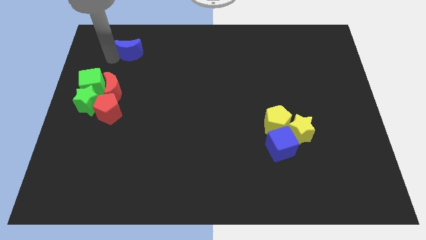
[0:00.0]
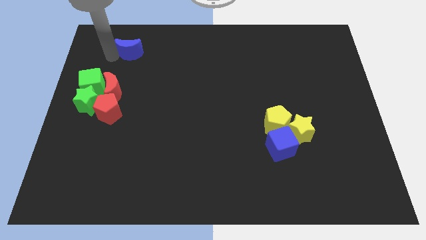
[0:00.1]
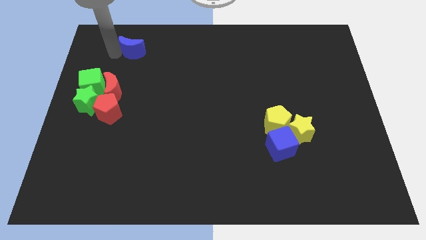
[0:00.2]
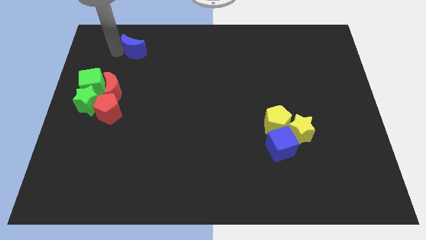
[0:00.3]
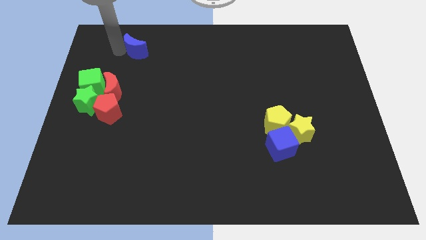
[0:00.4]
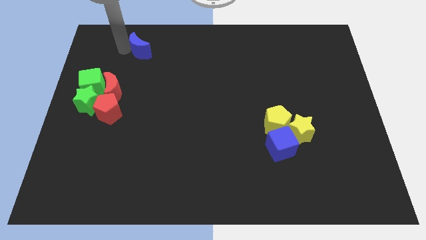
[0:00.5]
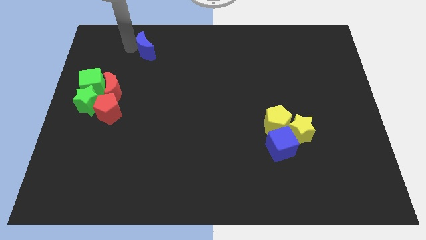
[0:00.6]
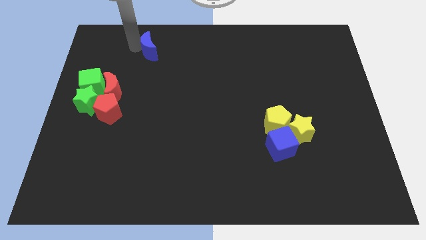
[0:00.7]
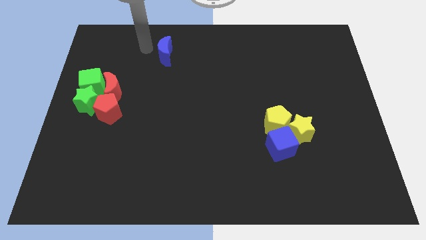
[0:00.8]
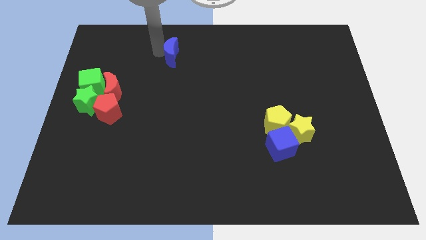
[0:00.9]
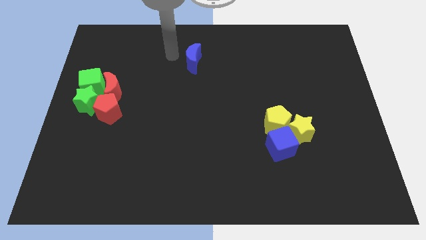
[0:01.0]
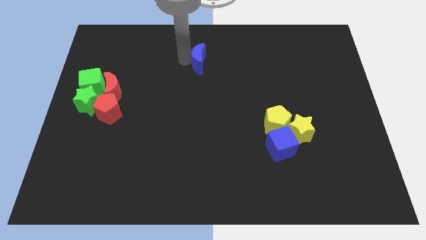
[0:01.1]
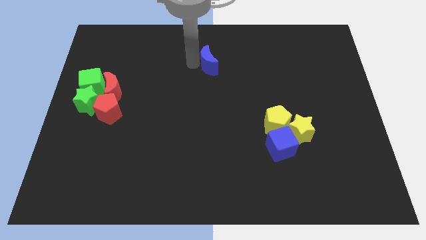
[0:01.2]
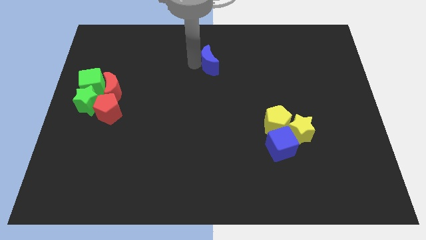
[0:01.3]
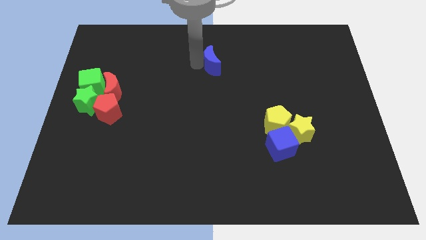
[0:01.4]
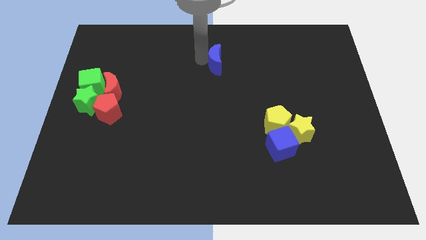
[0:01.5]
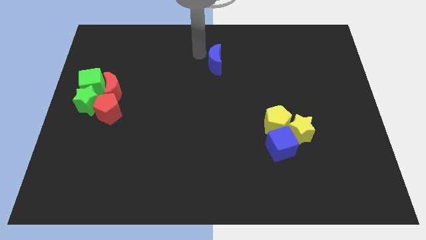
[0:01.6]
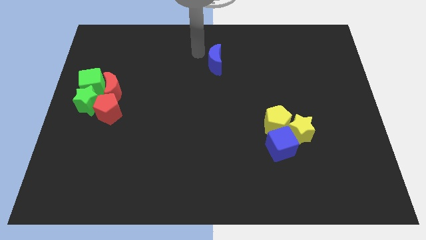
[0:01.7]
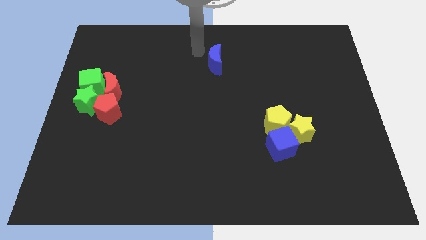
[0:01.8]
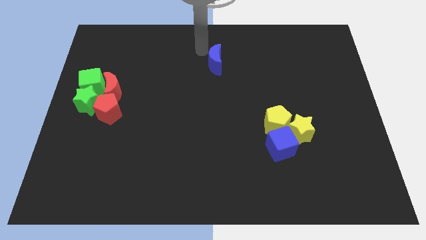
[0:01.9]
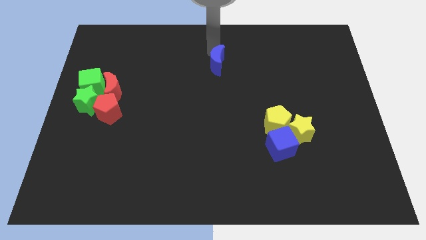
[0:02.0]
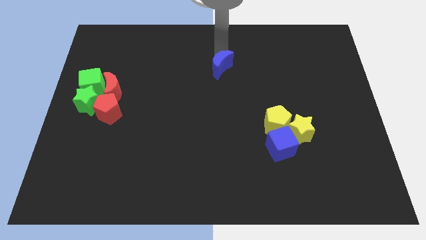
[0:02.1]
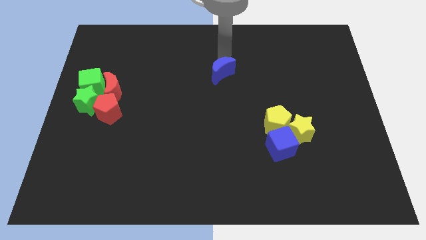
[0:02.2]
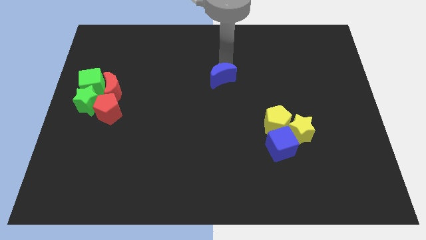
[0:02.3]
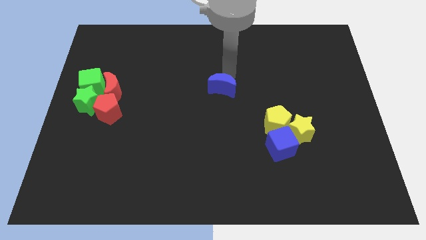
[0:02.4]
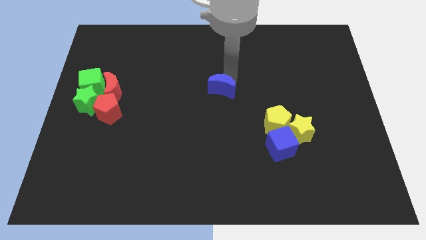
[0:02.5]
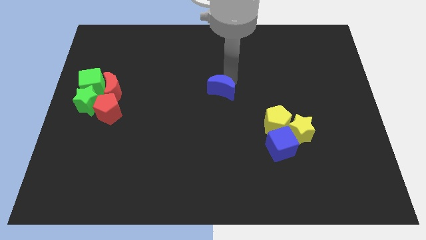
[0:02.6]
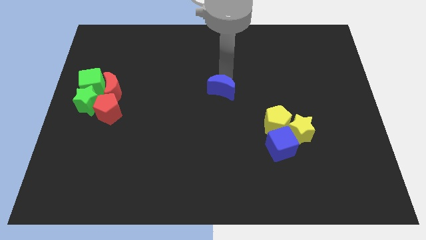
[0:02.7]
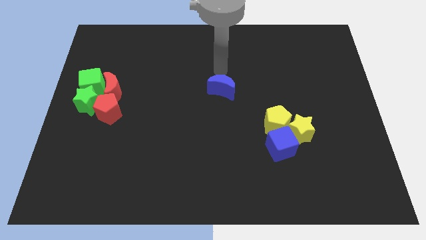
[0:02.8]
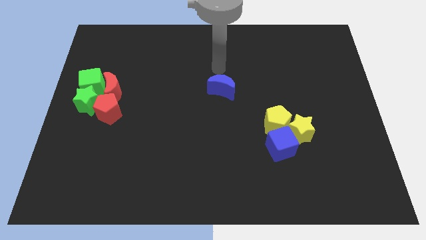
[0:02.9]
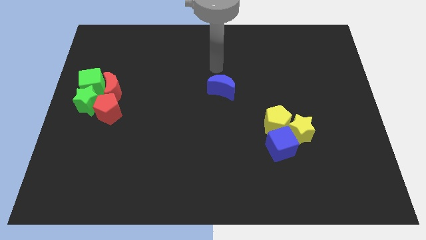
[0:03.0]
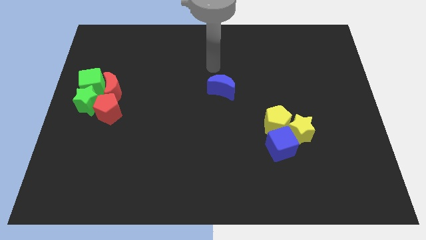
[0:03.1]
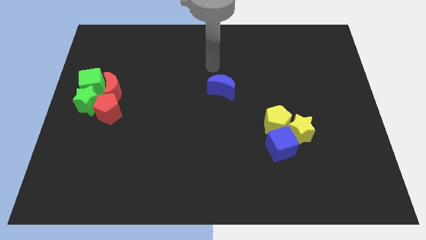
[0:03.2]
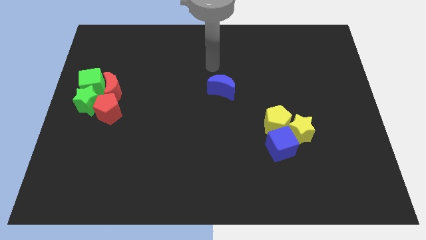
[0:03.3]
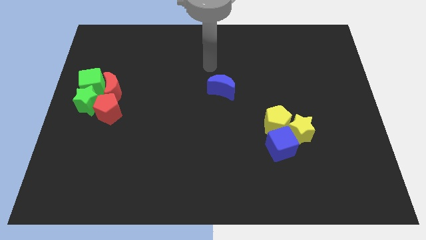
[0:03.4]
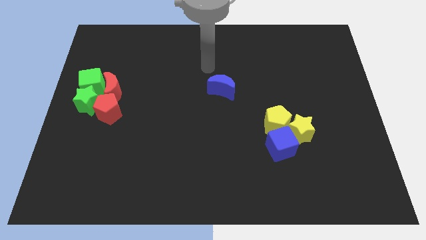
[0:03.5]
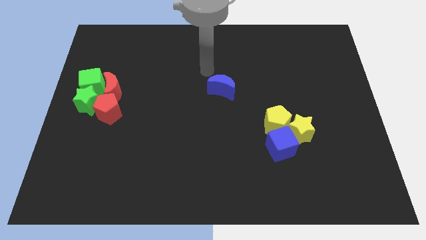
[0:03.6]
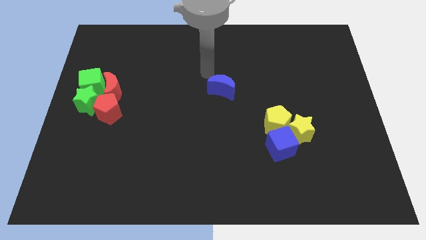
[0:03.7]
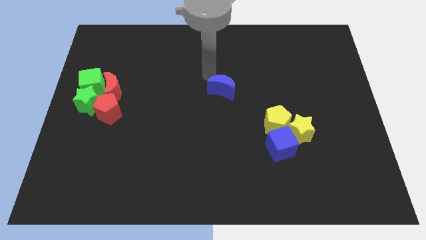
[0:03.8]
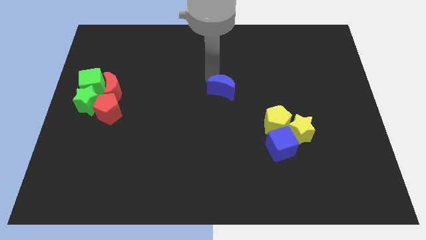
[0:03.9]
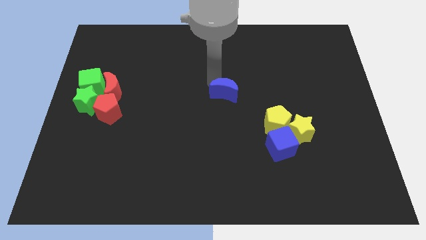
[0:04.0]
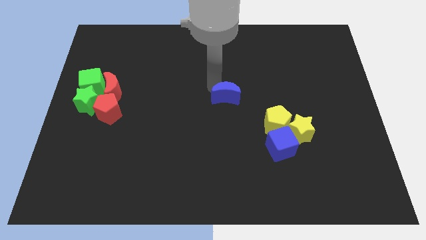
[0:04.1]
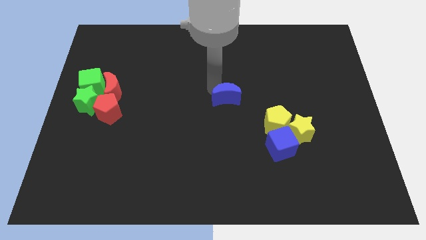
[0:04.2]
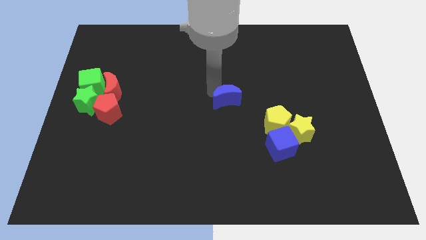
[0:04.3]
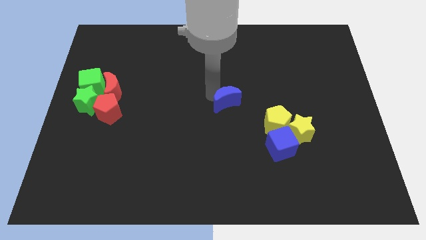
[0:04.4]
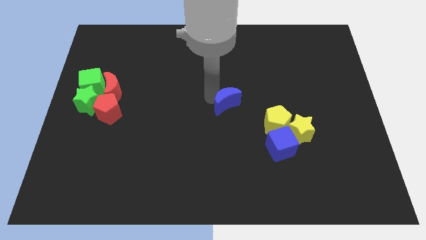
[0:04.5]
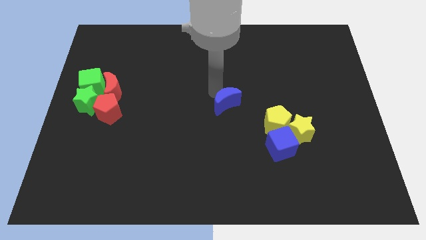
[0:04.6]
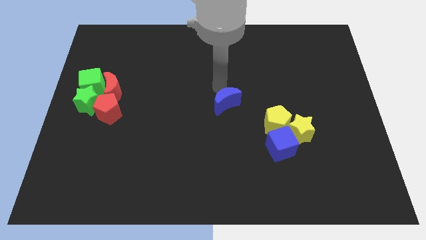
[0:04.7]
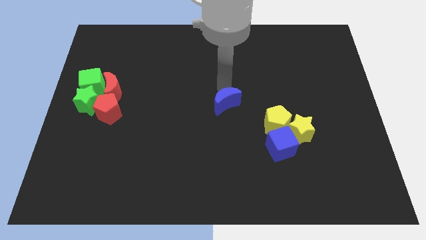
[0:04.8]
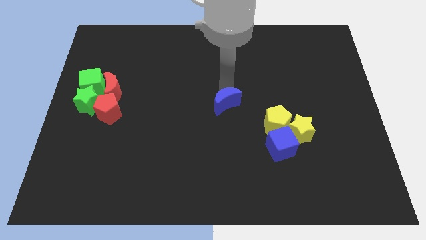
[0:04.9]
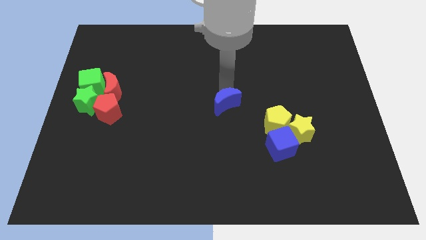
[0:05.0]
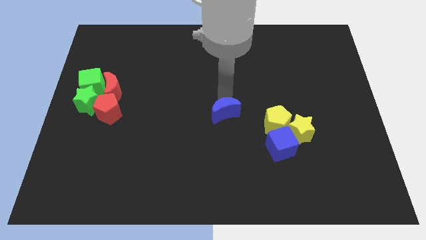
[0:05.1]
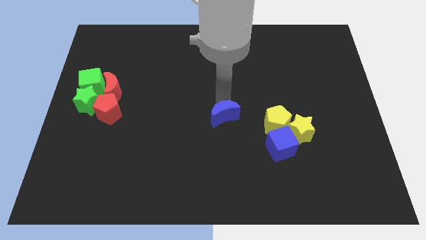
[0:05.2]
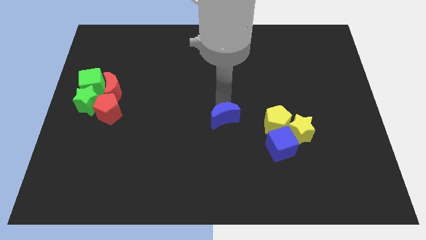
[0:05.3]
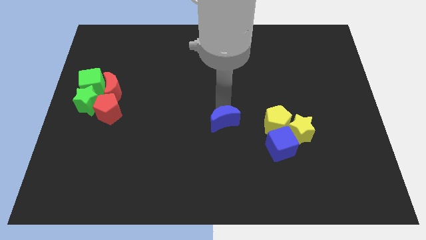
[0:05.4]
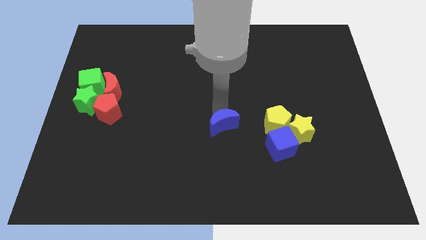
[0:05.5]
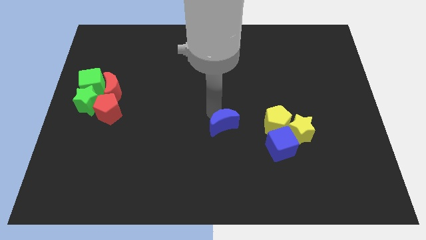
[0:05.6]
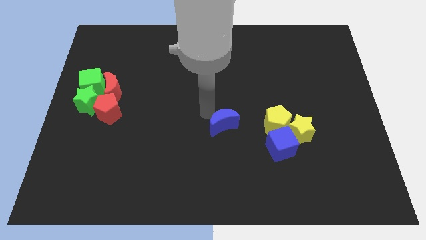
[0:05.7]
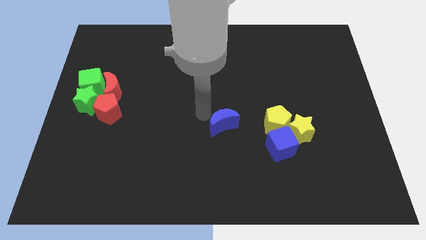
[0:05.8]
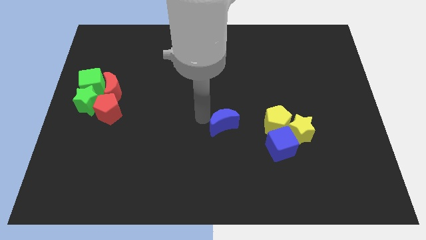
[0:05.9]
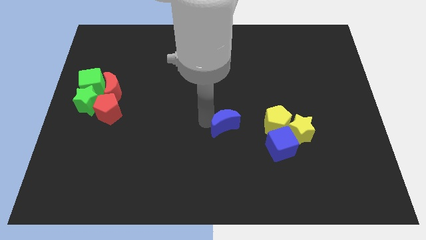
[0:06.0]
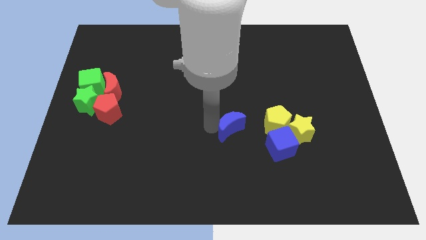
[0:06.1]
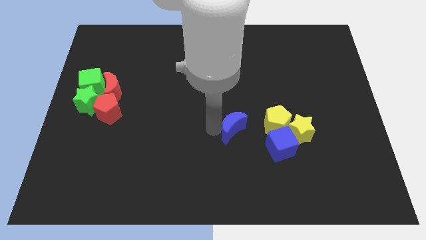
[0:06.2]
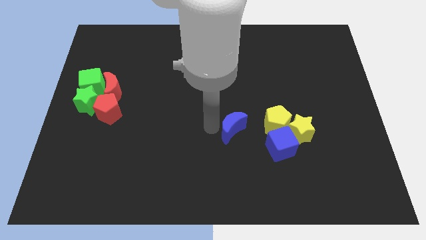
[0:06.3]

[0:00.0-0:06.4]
place the blue crescent to the left of the yellow pentagon

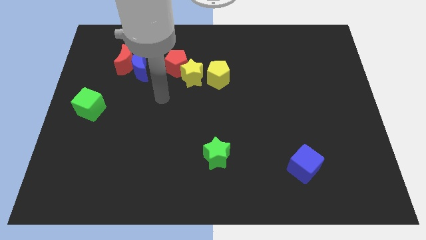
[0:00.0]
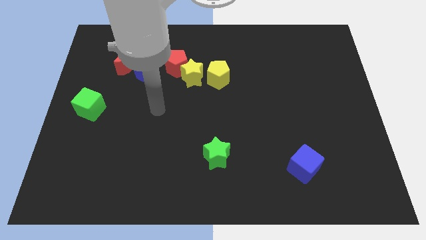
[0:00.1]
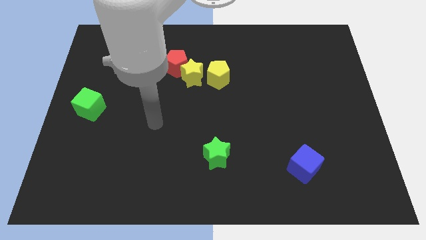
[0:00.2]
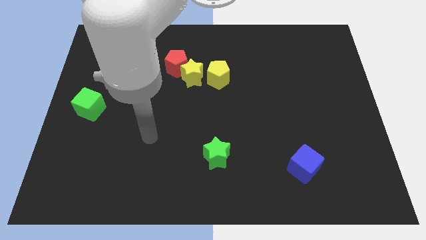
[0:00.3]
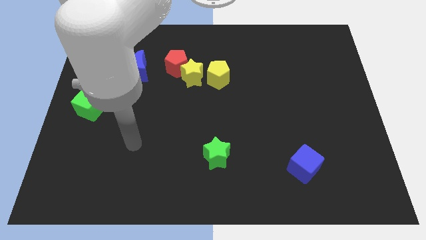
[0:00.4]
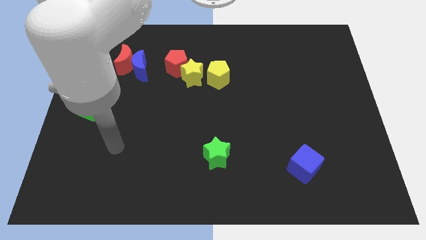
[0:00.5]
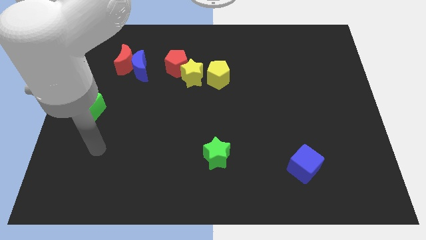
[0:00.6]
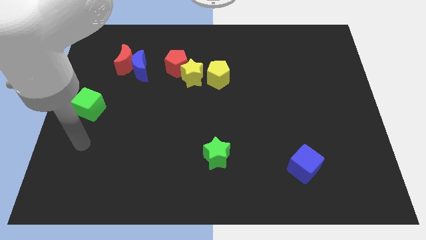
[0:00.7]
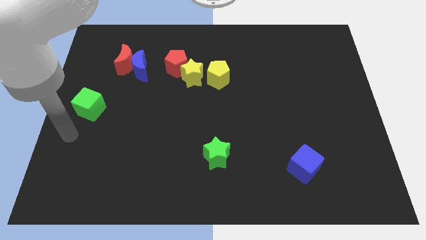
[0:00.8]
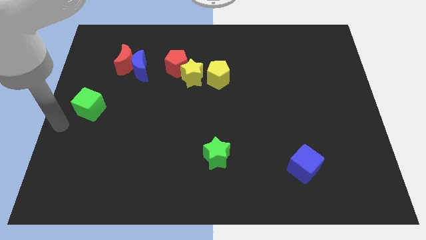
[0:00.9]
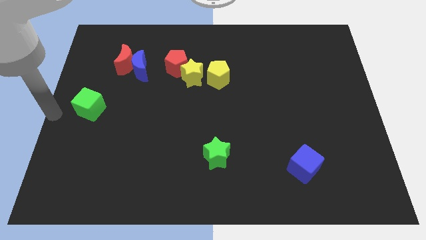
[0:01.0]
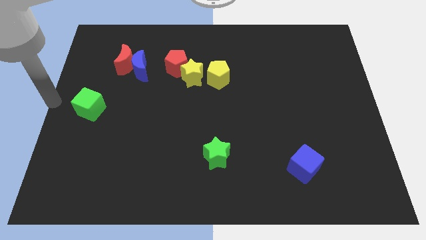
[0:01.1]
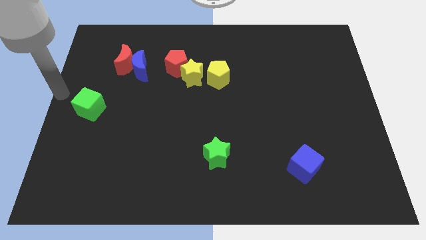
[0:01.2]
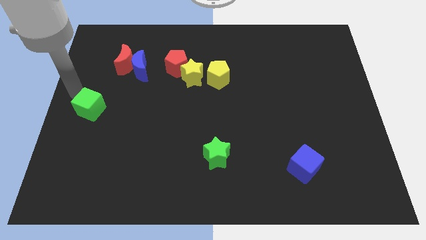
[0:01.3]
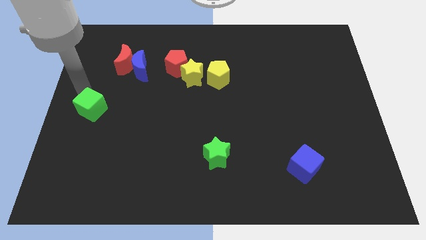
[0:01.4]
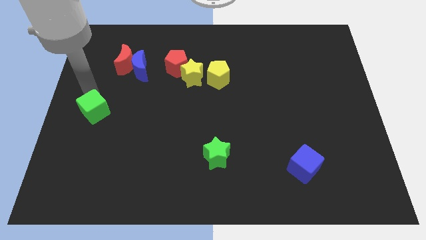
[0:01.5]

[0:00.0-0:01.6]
touch green cube with your arm

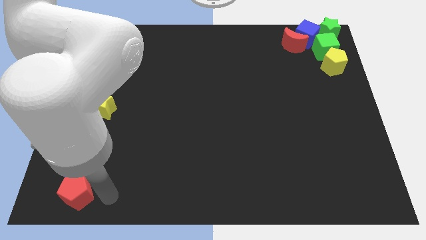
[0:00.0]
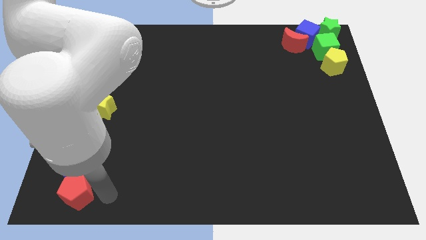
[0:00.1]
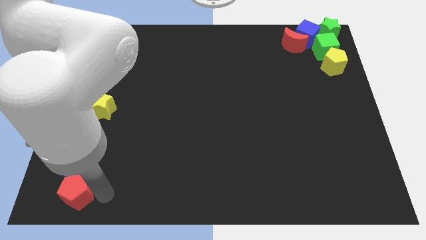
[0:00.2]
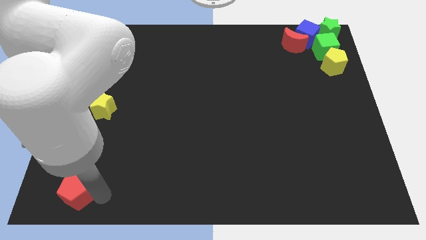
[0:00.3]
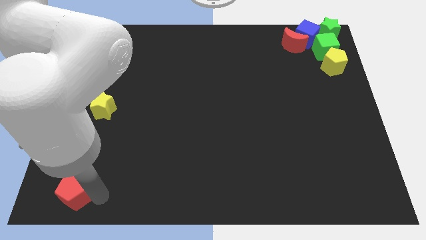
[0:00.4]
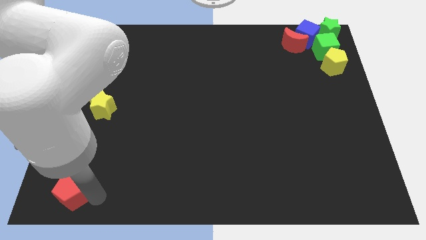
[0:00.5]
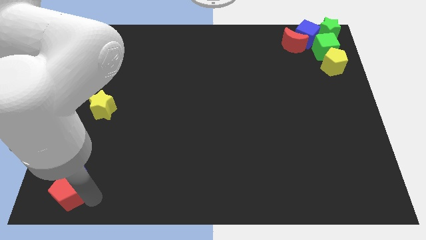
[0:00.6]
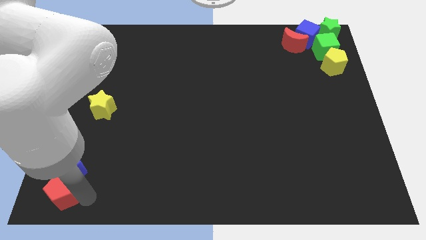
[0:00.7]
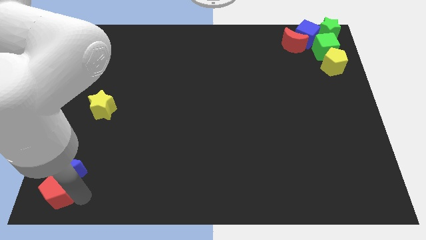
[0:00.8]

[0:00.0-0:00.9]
place the red pentagon below the blue crescent
